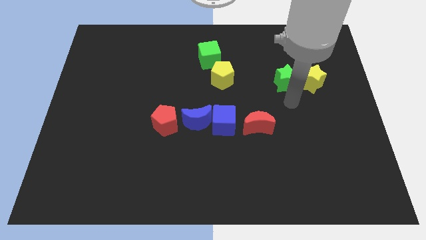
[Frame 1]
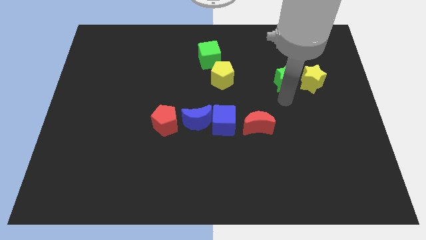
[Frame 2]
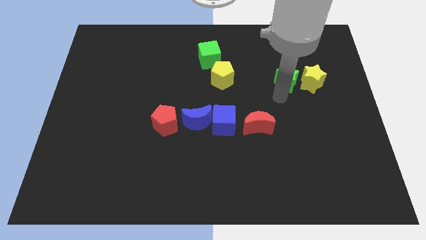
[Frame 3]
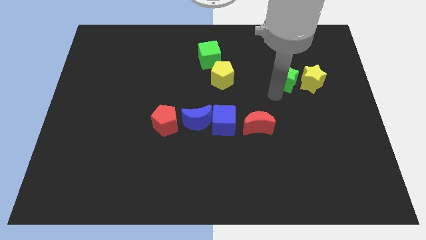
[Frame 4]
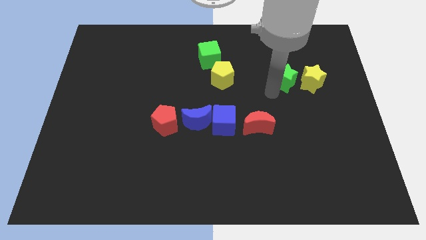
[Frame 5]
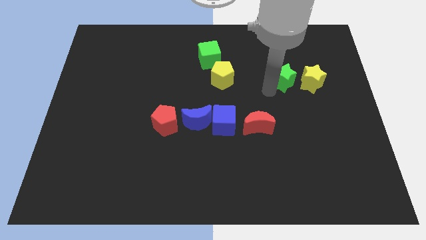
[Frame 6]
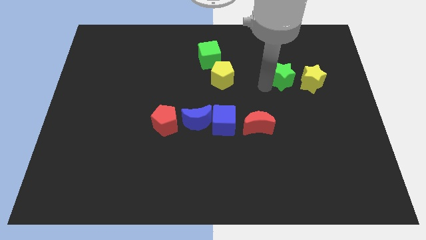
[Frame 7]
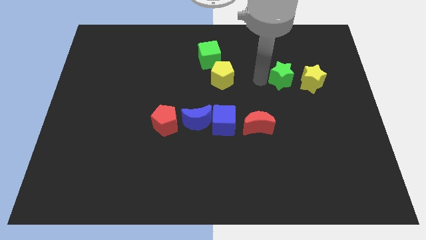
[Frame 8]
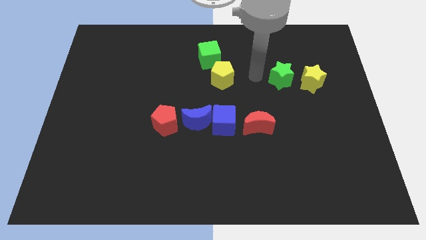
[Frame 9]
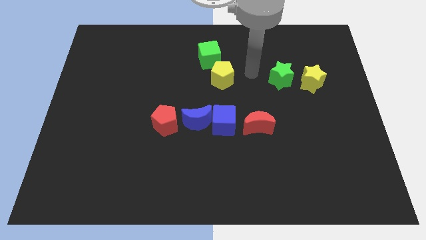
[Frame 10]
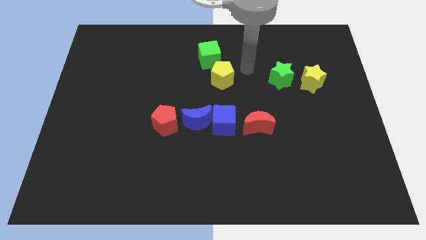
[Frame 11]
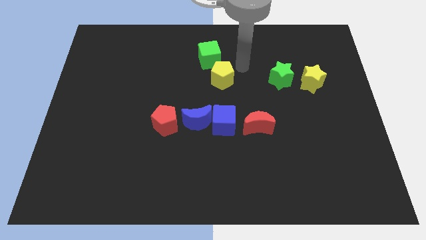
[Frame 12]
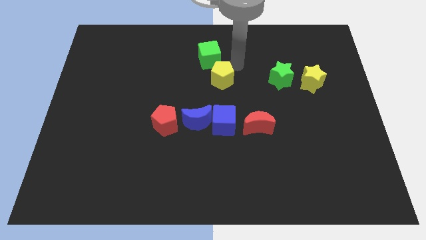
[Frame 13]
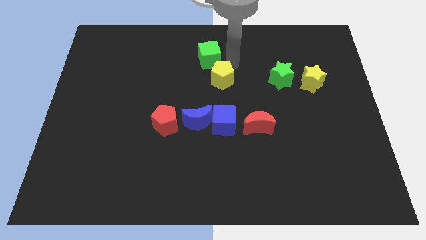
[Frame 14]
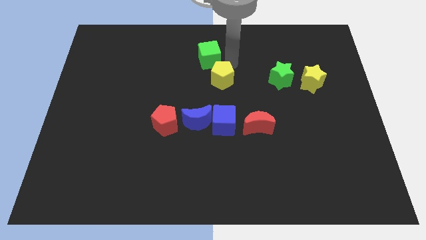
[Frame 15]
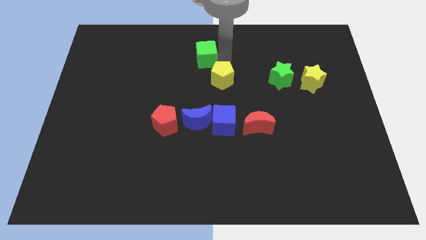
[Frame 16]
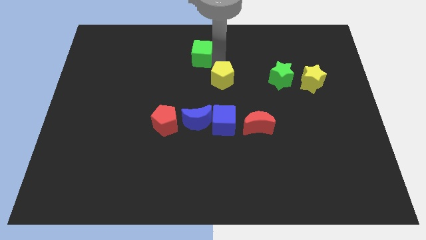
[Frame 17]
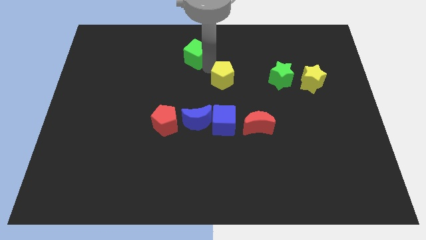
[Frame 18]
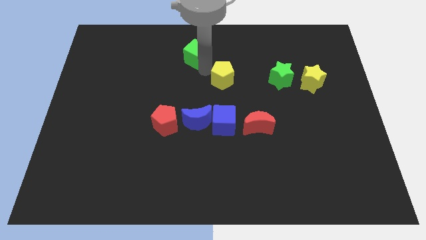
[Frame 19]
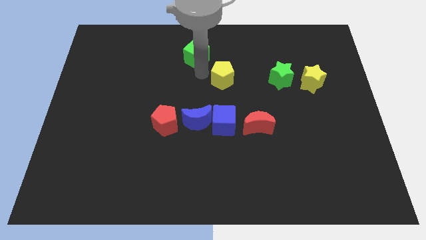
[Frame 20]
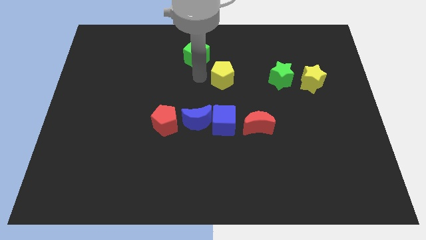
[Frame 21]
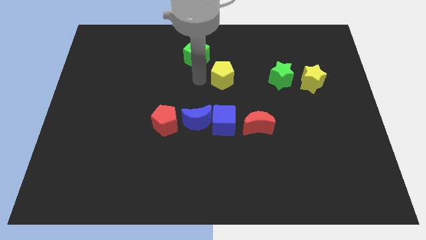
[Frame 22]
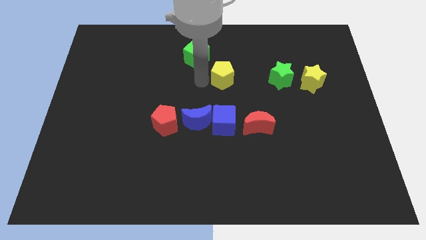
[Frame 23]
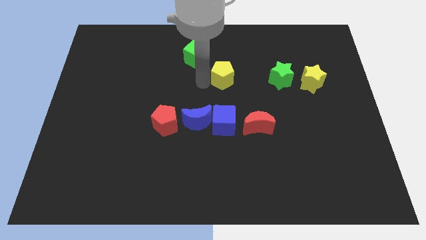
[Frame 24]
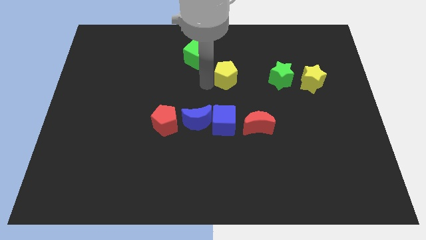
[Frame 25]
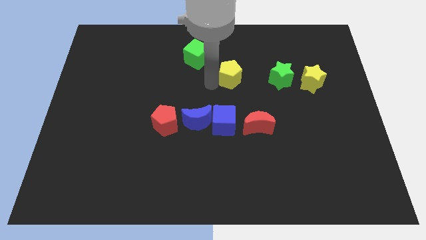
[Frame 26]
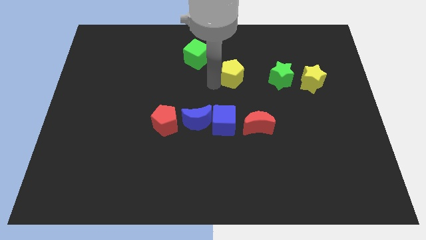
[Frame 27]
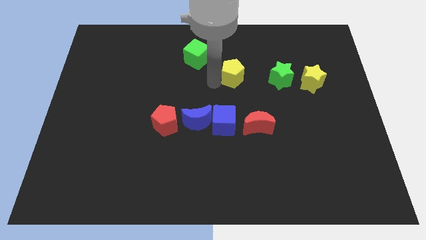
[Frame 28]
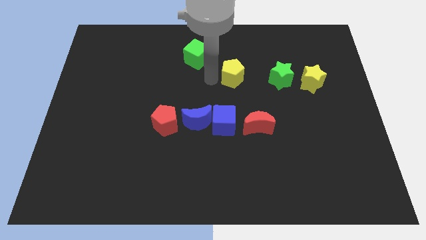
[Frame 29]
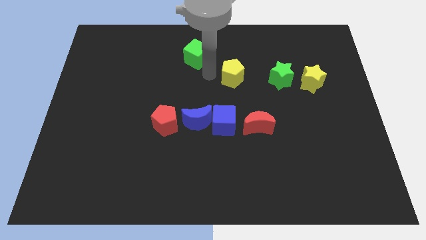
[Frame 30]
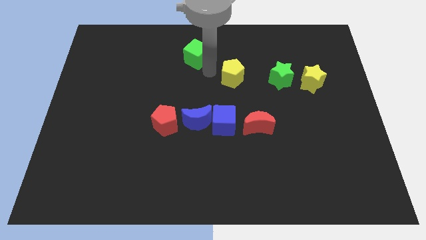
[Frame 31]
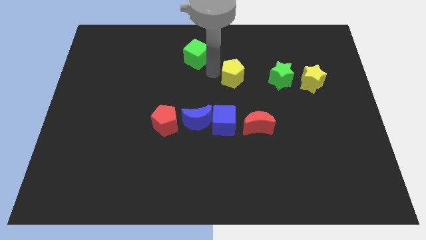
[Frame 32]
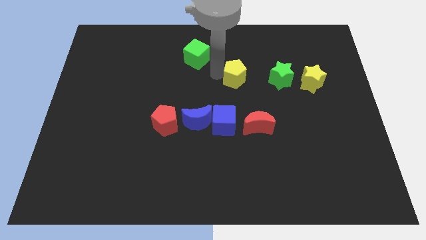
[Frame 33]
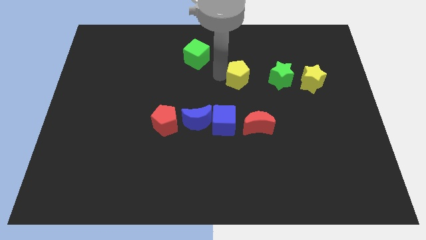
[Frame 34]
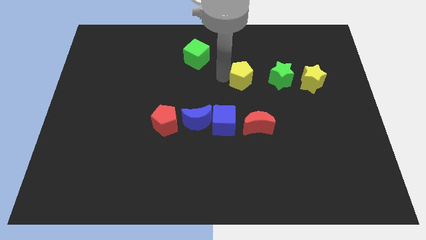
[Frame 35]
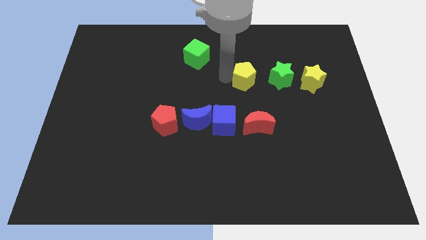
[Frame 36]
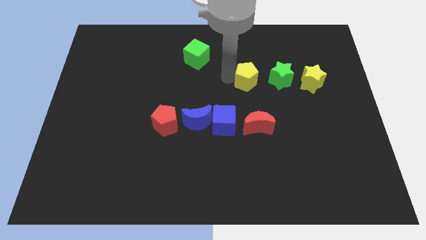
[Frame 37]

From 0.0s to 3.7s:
place yellow pentagon in between green star and green cube

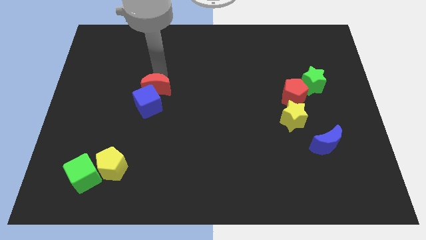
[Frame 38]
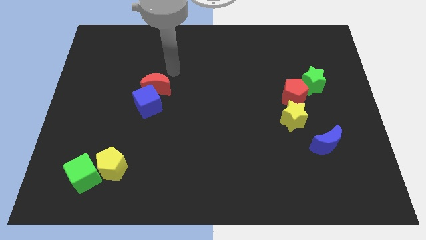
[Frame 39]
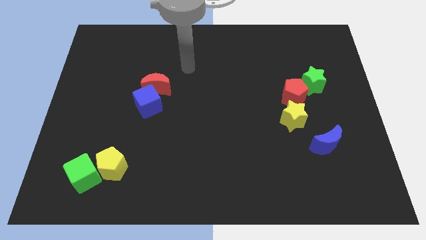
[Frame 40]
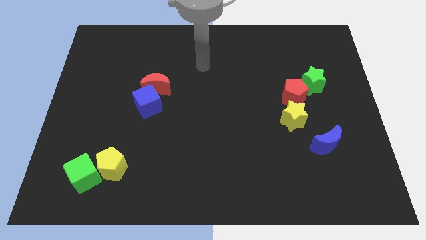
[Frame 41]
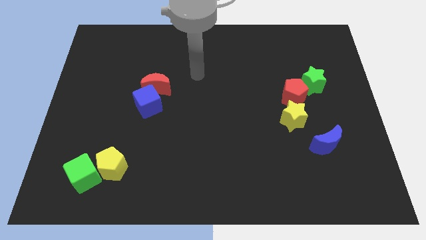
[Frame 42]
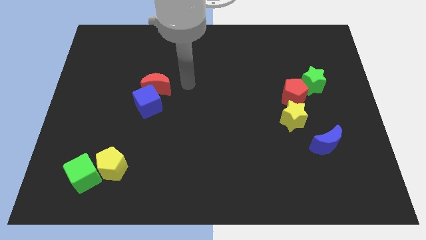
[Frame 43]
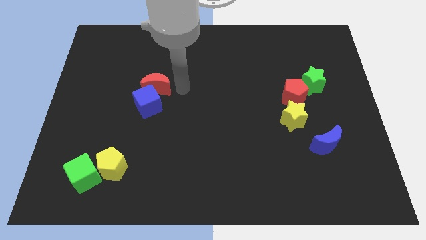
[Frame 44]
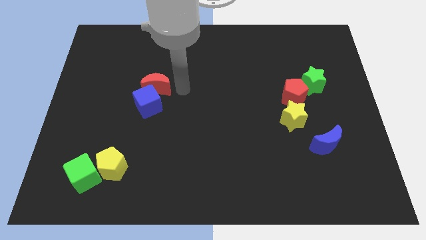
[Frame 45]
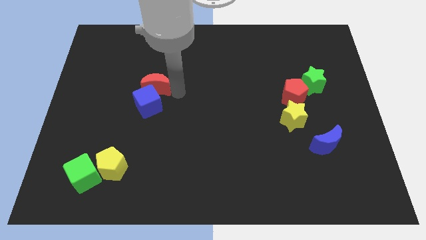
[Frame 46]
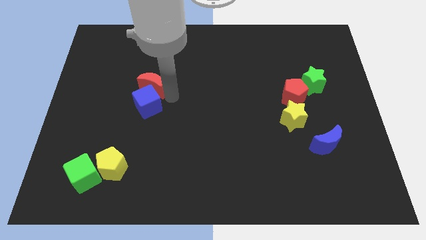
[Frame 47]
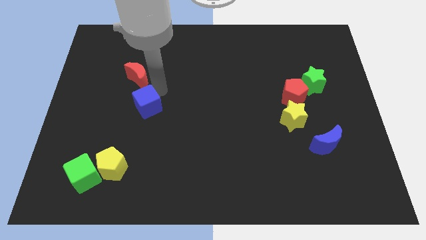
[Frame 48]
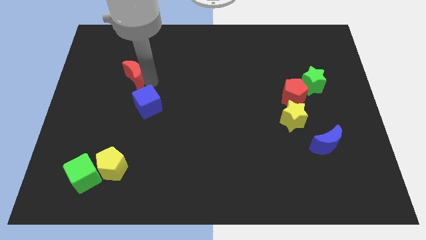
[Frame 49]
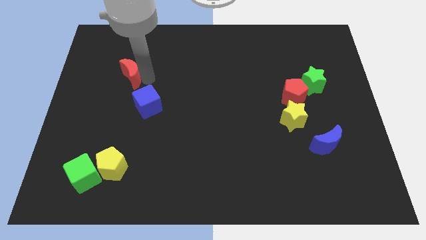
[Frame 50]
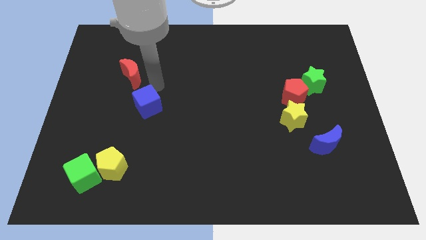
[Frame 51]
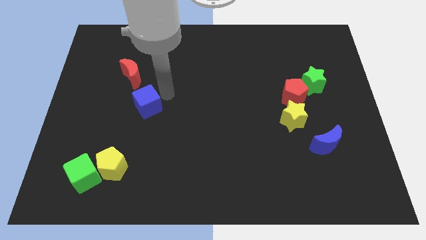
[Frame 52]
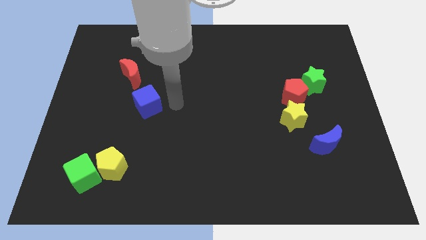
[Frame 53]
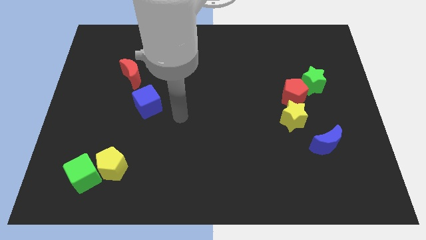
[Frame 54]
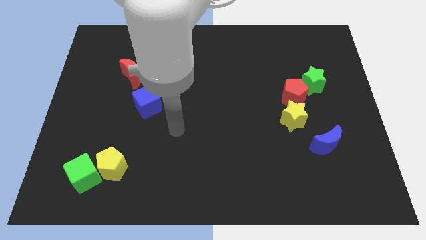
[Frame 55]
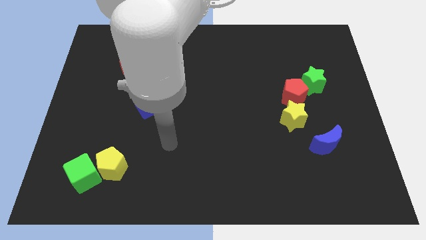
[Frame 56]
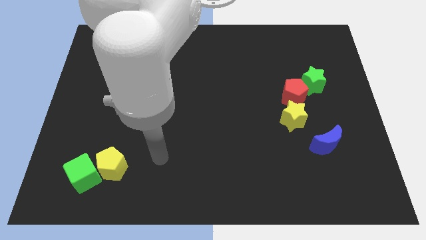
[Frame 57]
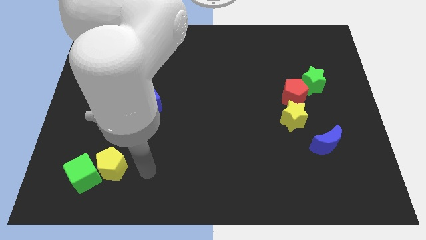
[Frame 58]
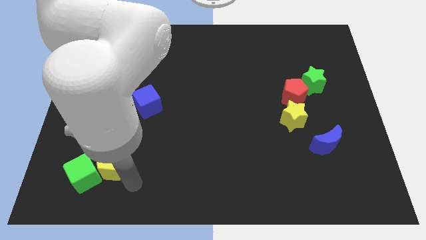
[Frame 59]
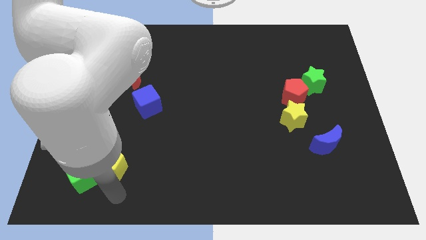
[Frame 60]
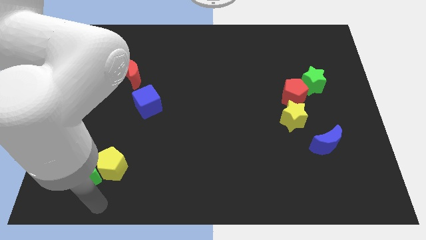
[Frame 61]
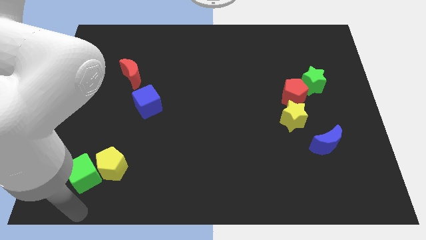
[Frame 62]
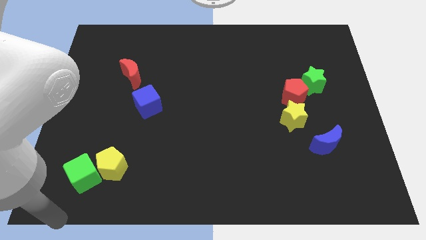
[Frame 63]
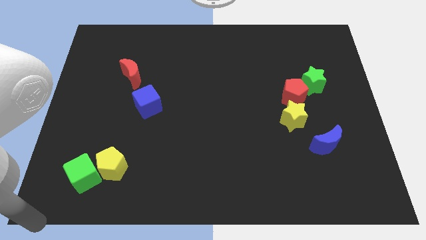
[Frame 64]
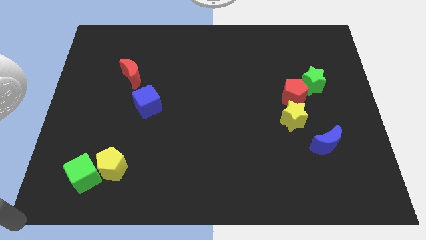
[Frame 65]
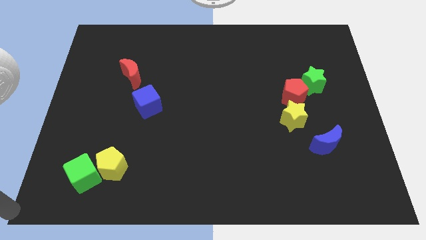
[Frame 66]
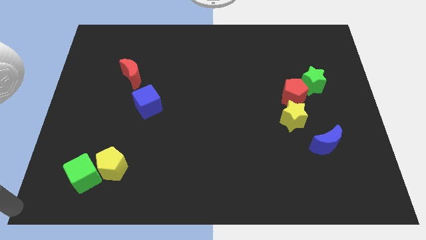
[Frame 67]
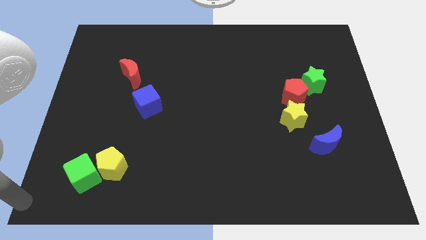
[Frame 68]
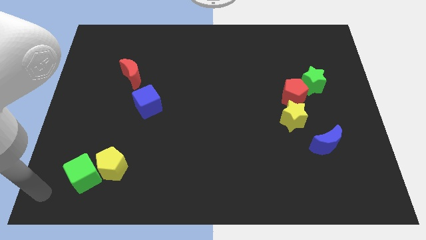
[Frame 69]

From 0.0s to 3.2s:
place your arm to the bottom left of the board

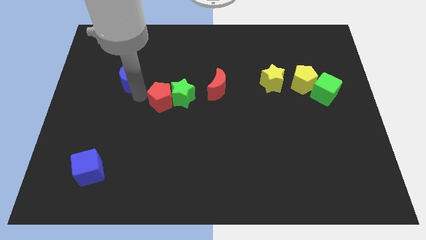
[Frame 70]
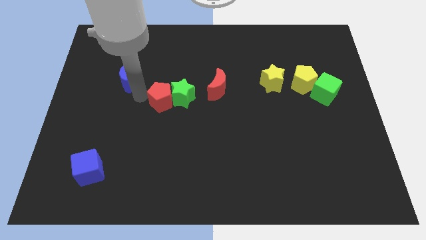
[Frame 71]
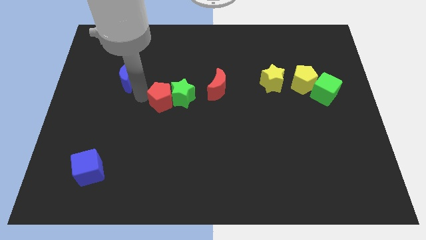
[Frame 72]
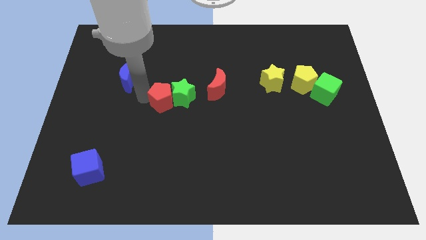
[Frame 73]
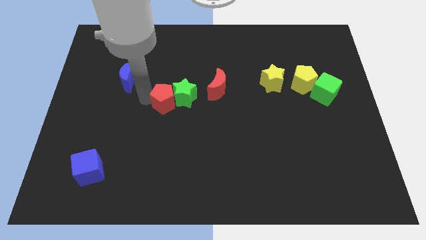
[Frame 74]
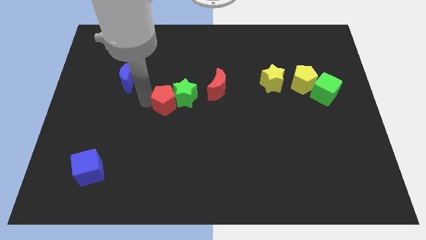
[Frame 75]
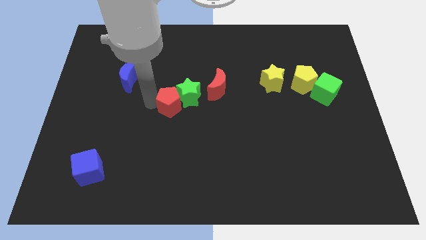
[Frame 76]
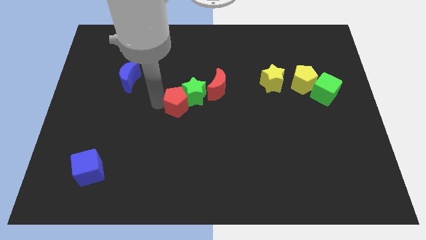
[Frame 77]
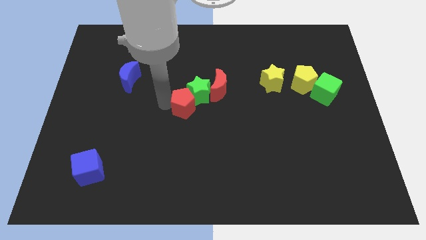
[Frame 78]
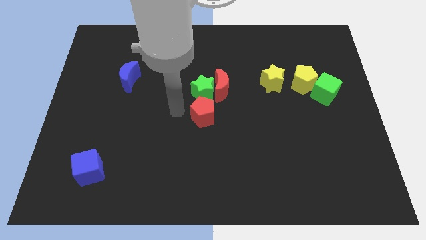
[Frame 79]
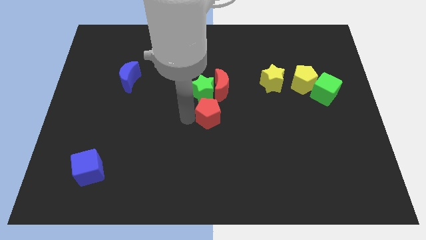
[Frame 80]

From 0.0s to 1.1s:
push the green star and red pentagon towards the center of the board

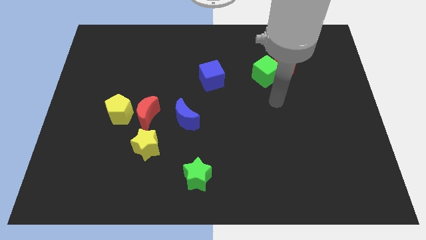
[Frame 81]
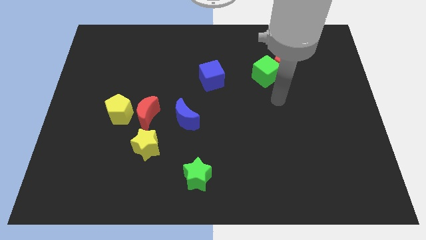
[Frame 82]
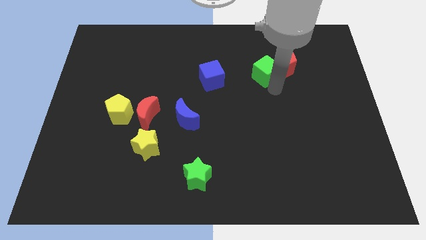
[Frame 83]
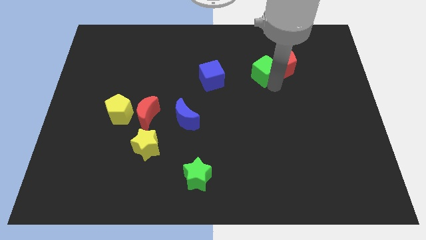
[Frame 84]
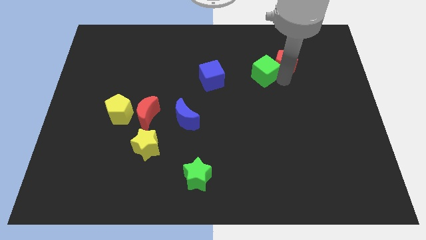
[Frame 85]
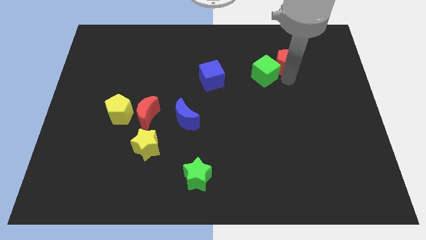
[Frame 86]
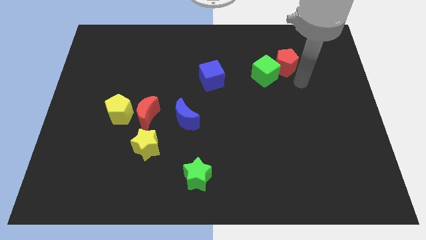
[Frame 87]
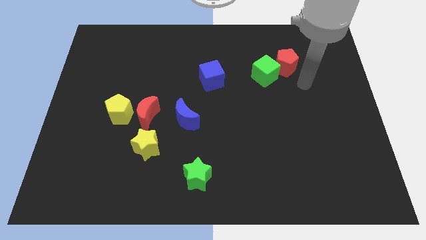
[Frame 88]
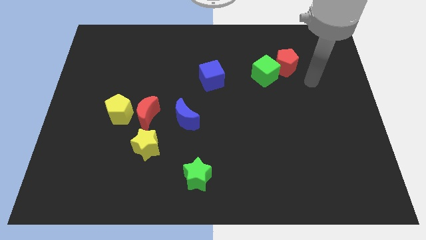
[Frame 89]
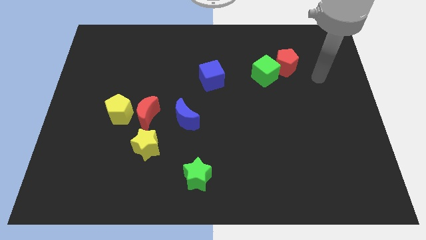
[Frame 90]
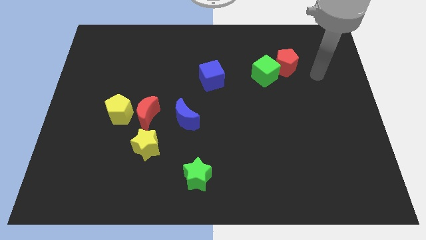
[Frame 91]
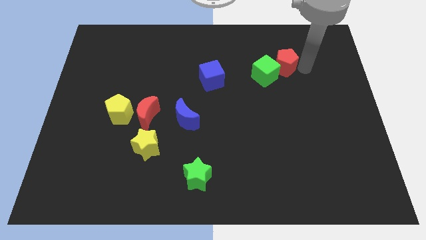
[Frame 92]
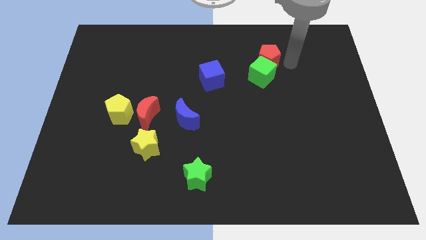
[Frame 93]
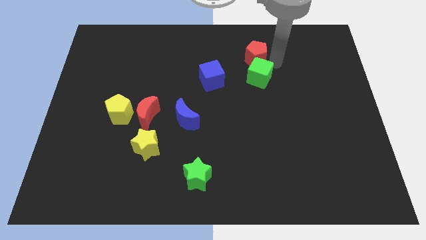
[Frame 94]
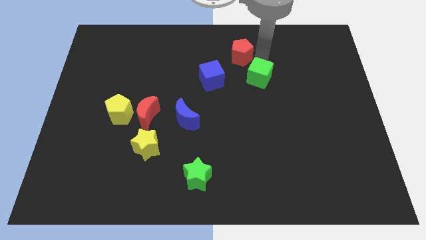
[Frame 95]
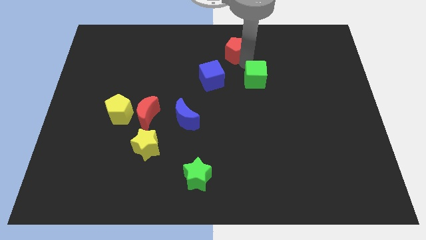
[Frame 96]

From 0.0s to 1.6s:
separate the red pentagon from the green cube
